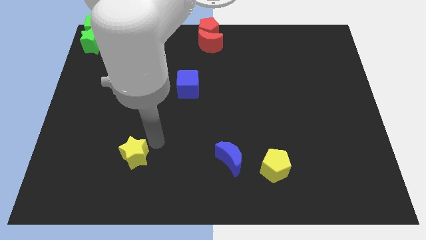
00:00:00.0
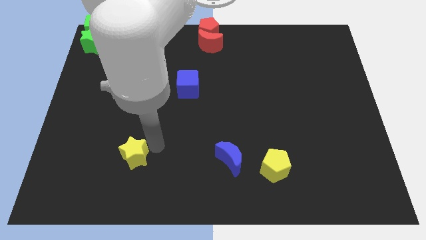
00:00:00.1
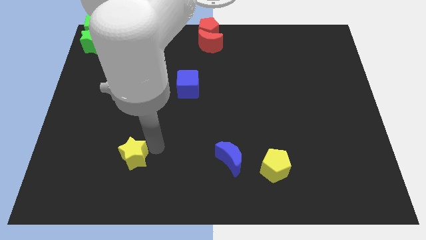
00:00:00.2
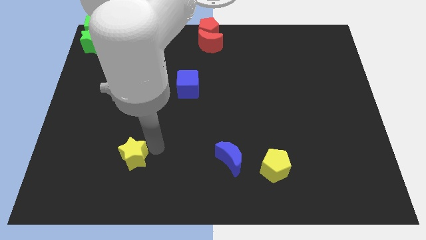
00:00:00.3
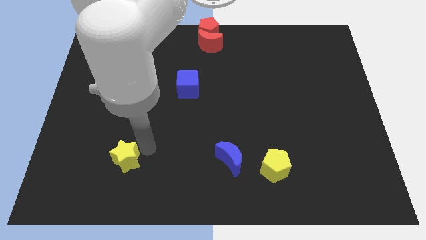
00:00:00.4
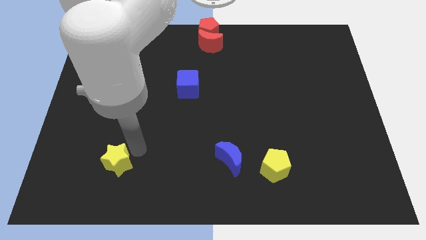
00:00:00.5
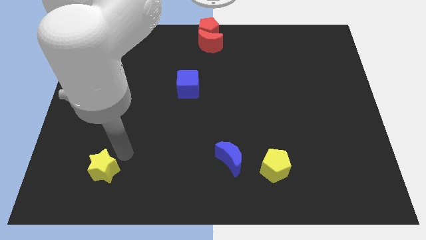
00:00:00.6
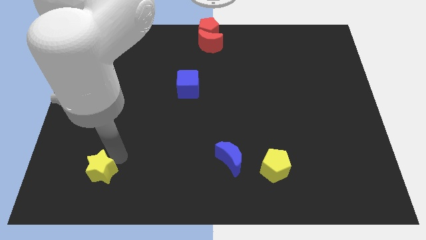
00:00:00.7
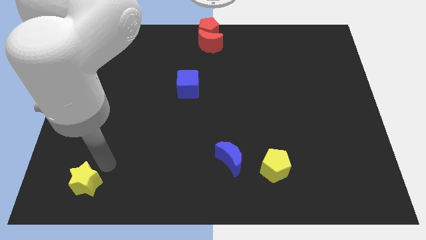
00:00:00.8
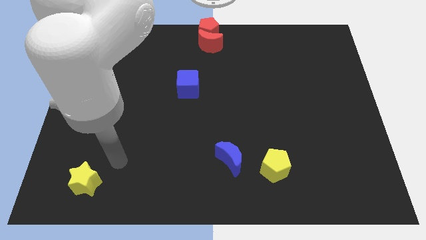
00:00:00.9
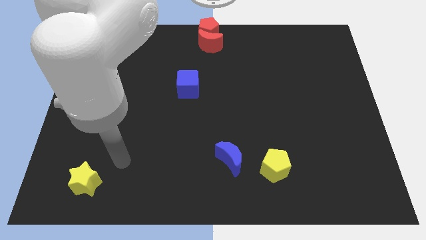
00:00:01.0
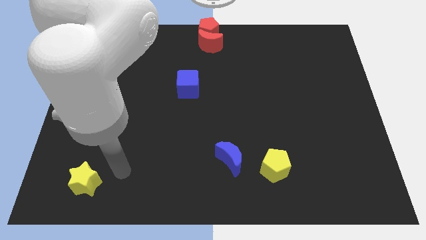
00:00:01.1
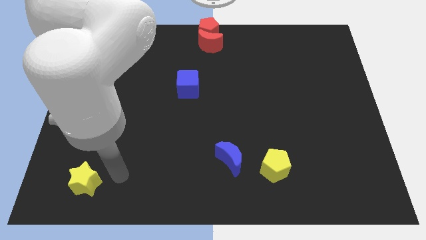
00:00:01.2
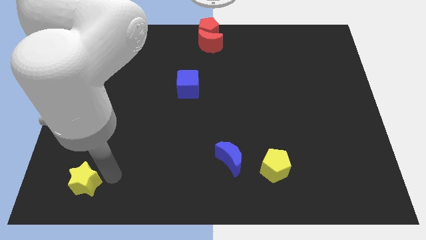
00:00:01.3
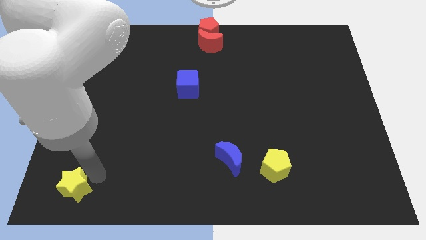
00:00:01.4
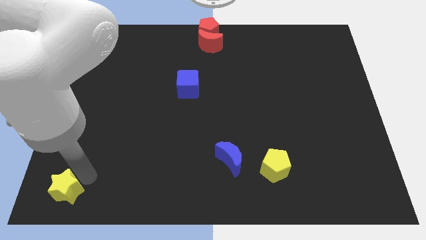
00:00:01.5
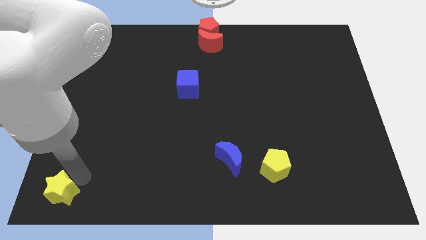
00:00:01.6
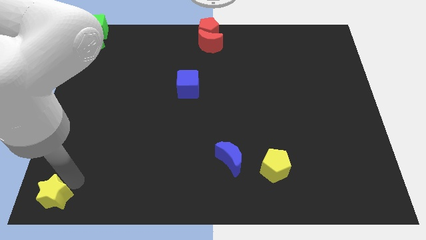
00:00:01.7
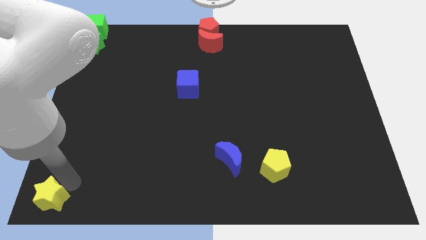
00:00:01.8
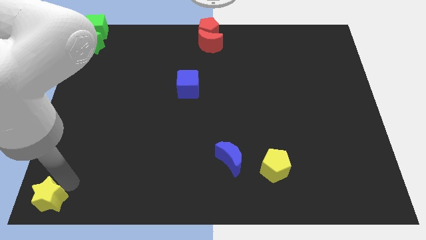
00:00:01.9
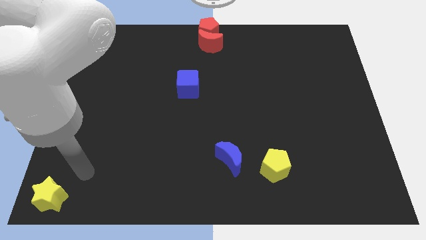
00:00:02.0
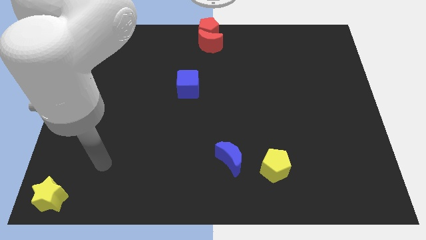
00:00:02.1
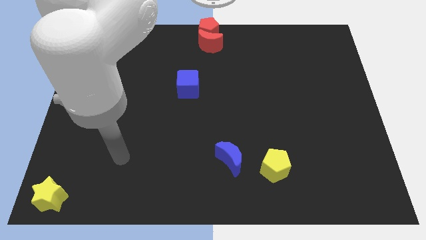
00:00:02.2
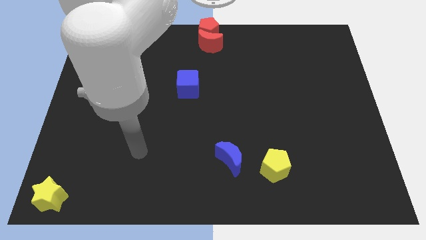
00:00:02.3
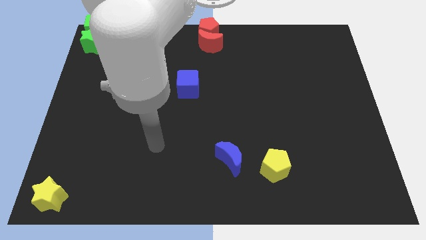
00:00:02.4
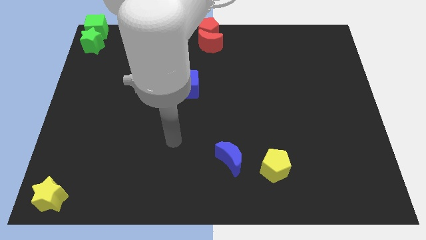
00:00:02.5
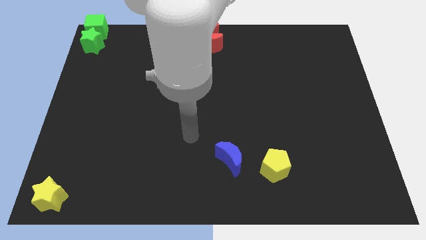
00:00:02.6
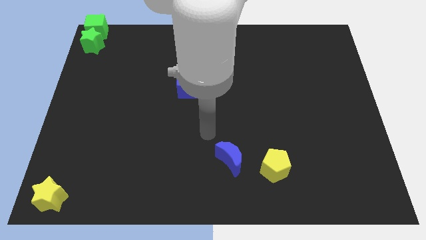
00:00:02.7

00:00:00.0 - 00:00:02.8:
slide yellow star to bottom left corner

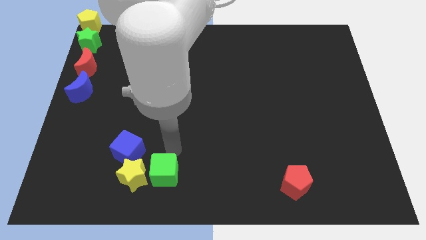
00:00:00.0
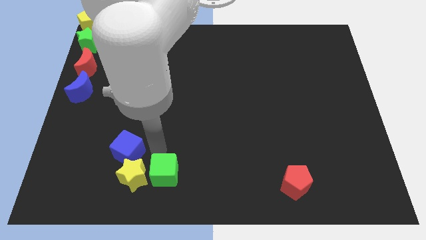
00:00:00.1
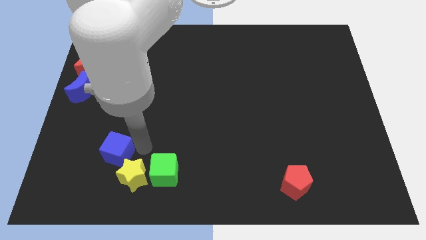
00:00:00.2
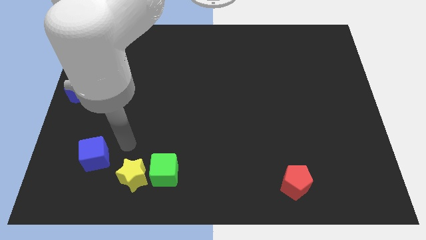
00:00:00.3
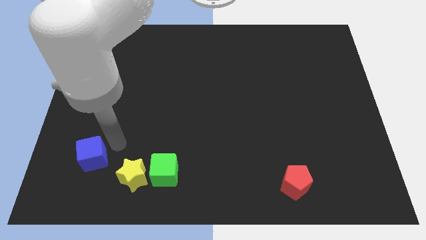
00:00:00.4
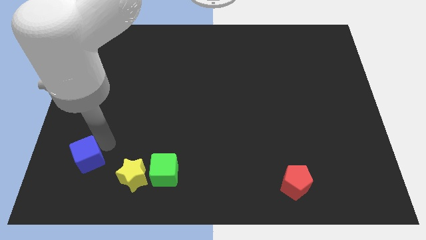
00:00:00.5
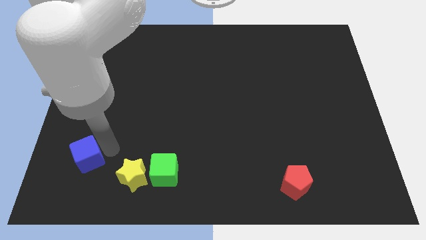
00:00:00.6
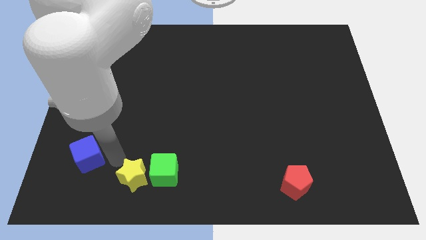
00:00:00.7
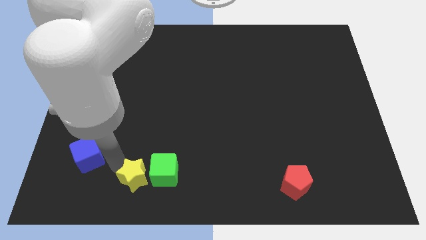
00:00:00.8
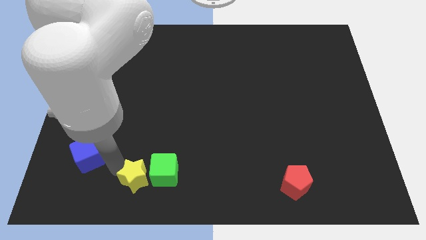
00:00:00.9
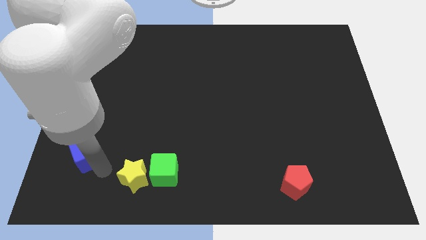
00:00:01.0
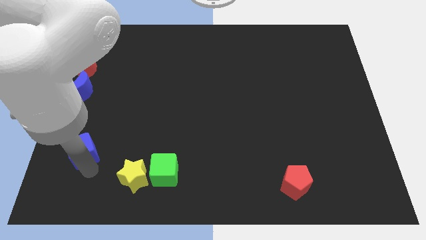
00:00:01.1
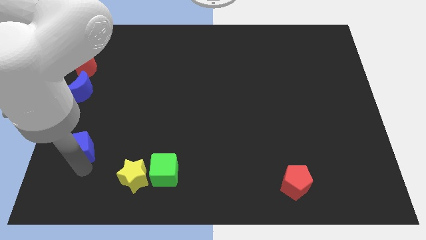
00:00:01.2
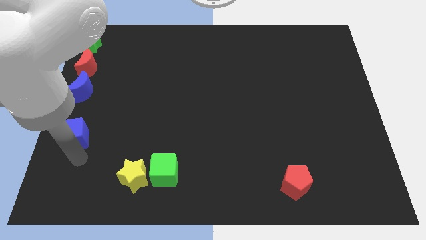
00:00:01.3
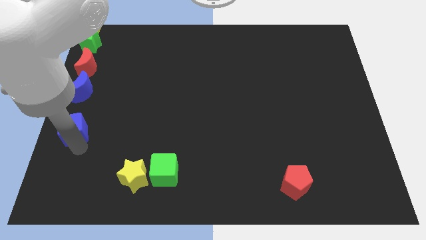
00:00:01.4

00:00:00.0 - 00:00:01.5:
separate blue cube from the yellow star

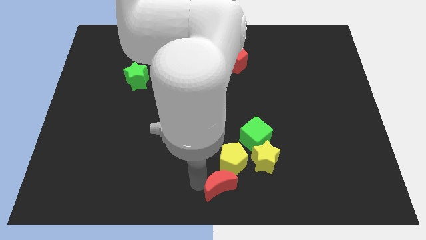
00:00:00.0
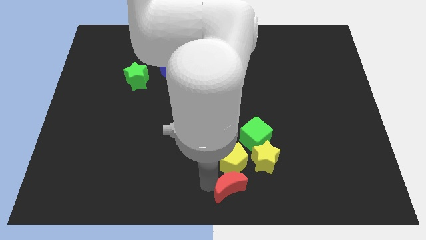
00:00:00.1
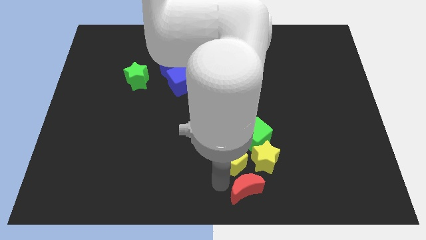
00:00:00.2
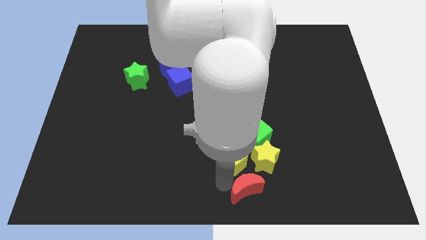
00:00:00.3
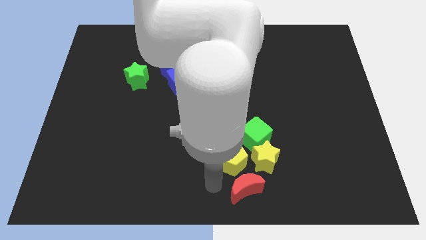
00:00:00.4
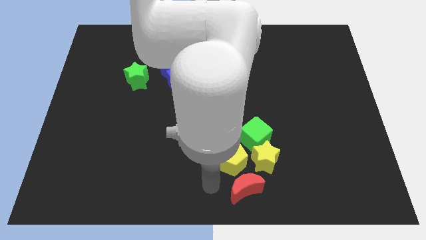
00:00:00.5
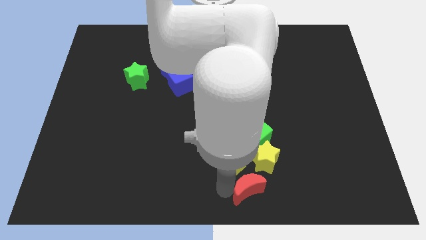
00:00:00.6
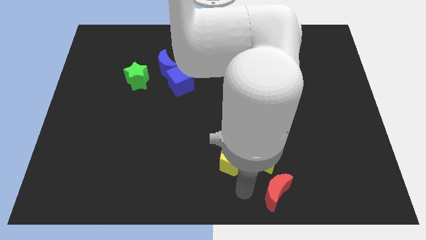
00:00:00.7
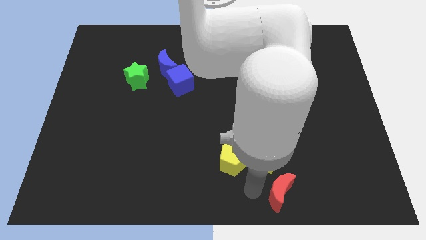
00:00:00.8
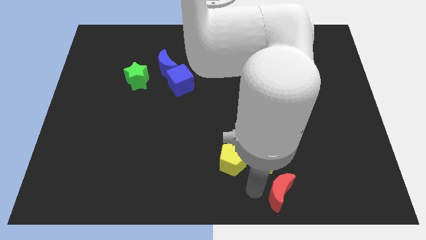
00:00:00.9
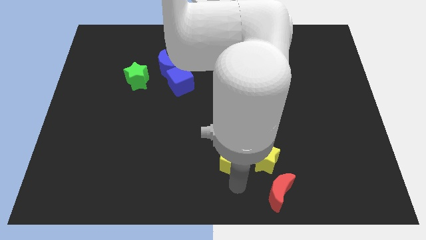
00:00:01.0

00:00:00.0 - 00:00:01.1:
place the red moon down to the yellow star

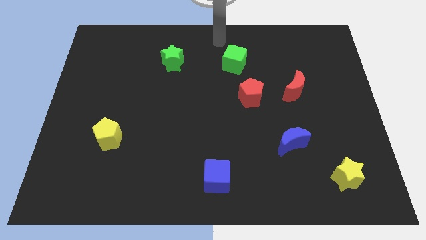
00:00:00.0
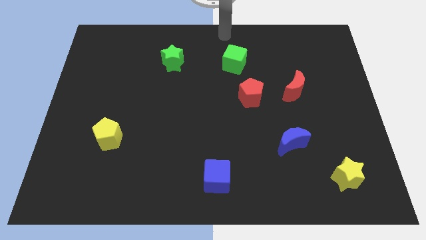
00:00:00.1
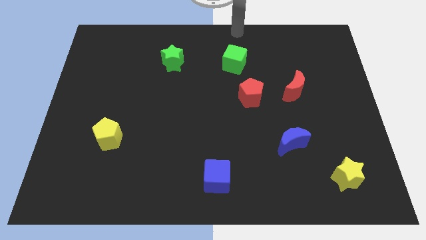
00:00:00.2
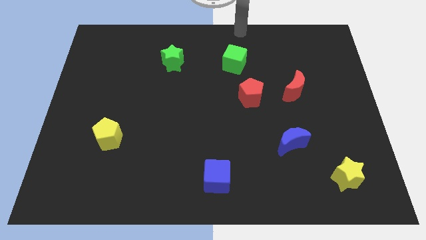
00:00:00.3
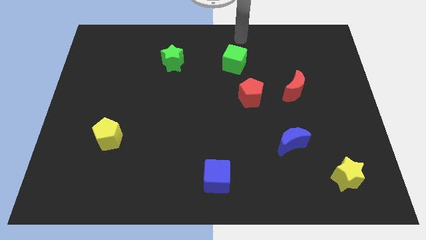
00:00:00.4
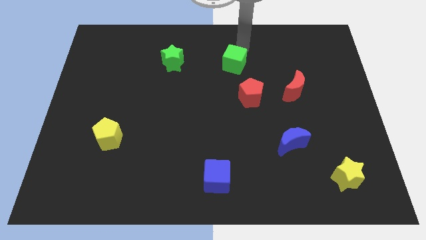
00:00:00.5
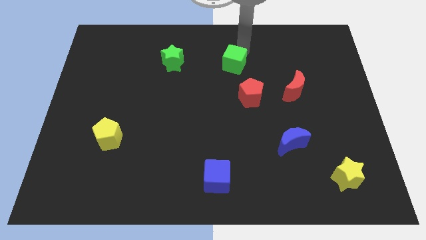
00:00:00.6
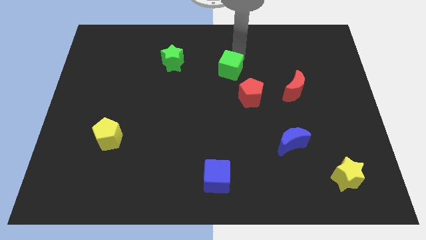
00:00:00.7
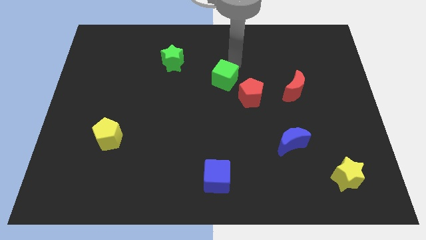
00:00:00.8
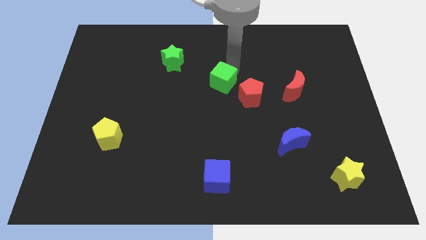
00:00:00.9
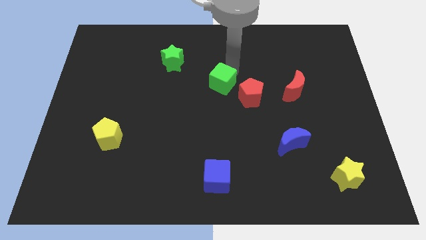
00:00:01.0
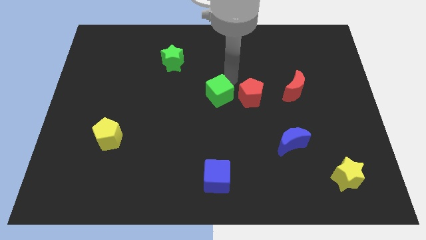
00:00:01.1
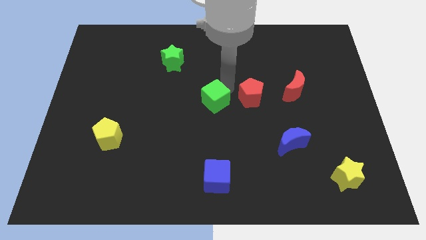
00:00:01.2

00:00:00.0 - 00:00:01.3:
push green cube beside red pentagon

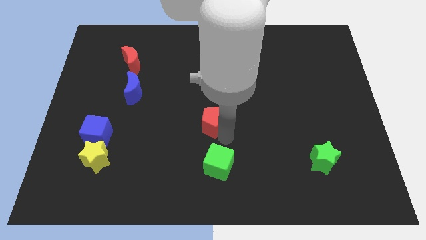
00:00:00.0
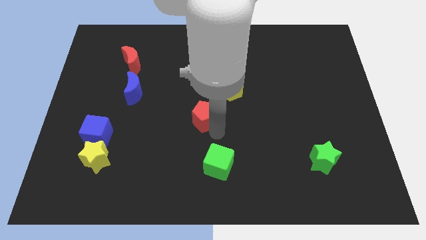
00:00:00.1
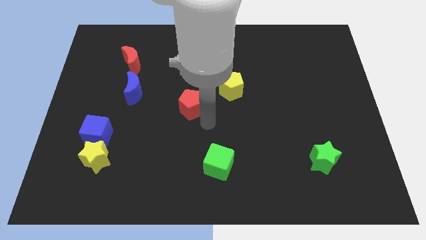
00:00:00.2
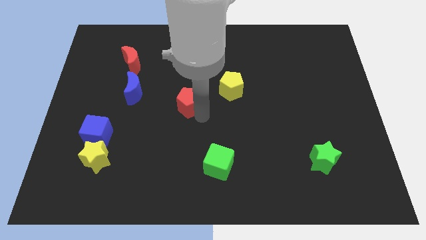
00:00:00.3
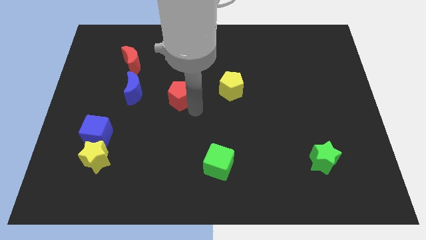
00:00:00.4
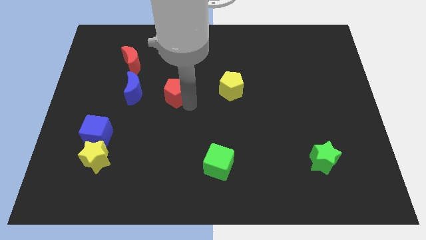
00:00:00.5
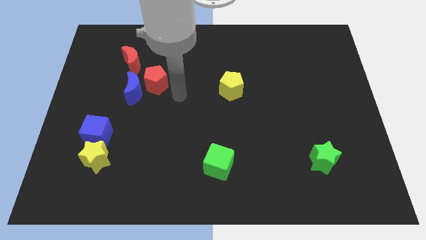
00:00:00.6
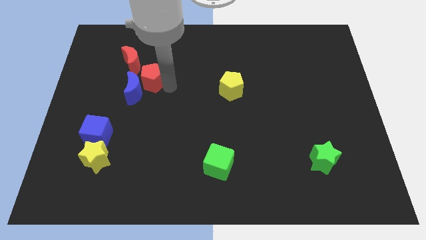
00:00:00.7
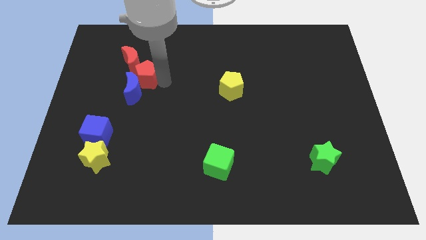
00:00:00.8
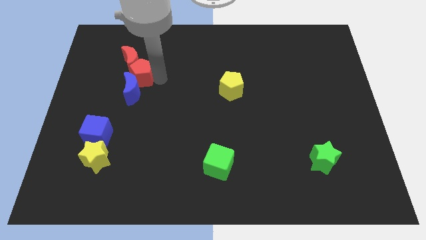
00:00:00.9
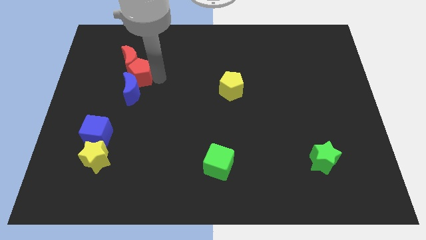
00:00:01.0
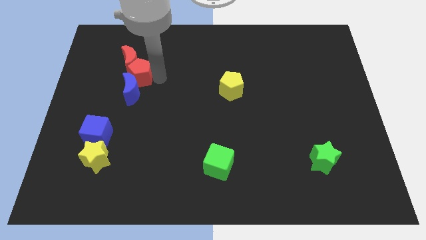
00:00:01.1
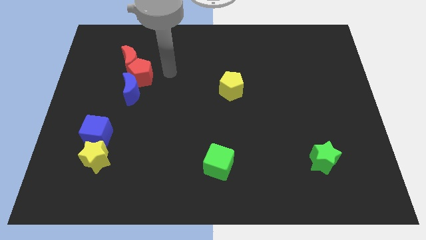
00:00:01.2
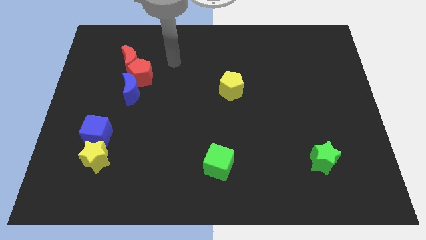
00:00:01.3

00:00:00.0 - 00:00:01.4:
push the red pentagon into the red crescent

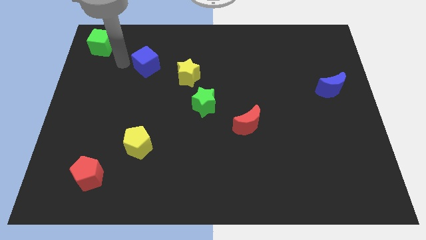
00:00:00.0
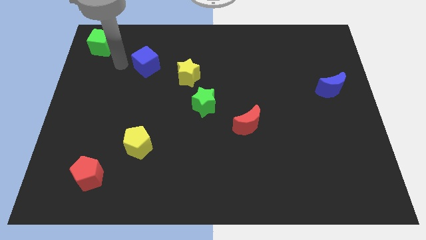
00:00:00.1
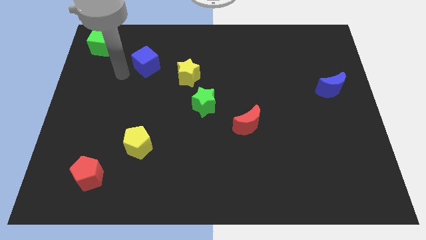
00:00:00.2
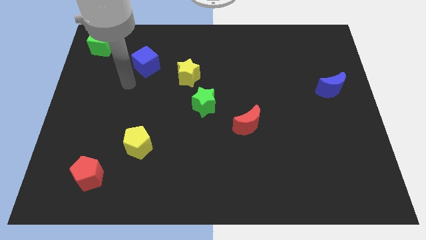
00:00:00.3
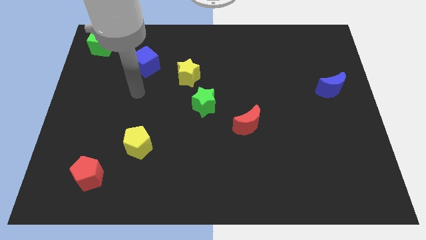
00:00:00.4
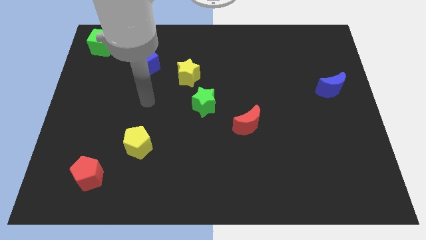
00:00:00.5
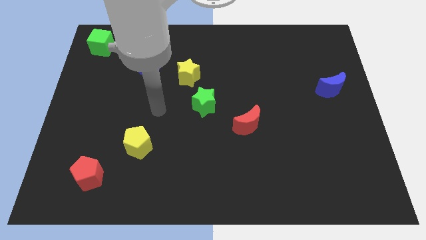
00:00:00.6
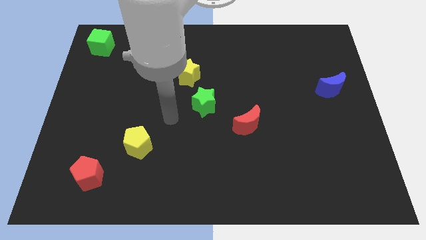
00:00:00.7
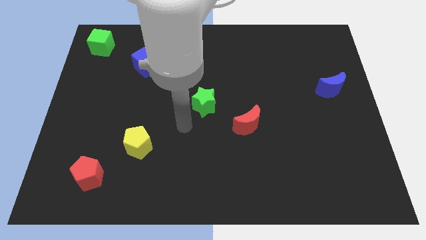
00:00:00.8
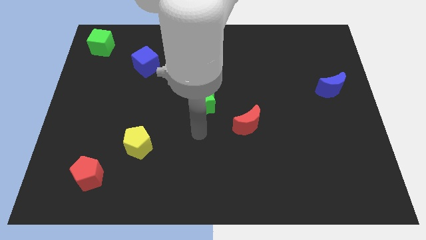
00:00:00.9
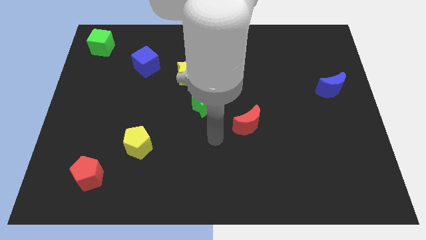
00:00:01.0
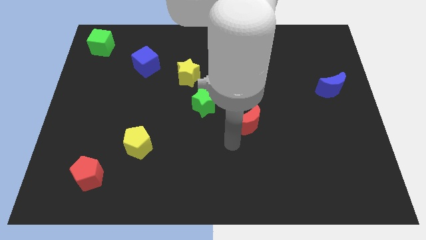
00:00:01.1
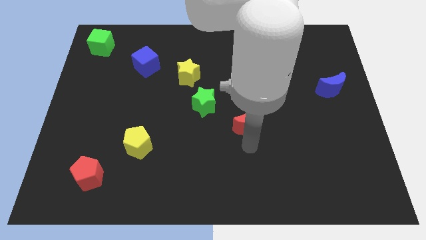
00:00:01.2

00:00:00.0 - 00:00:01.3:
point your arm at the bottom of the red crescent
